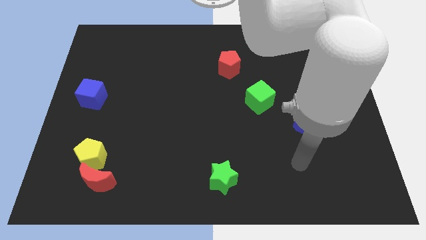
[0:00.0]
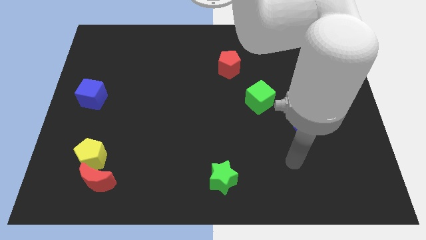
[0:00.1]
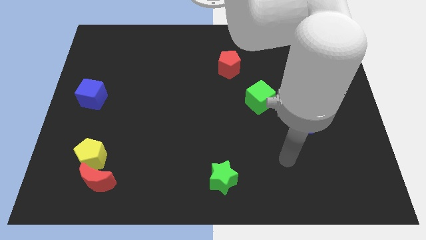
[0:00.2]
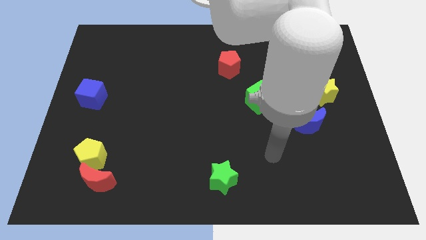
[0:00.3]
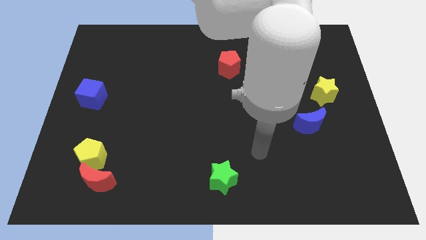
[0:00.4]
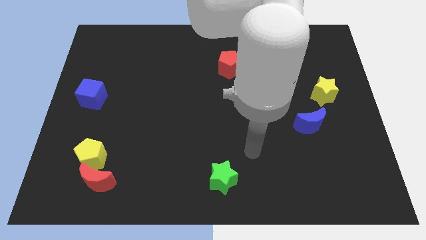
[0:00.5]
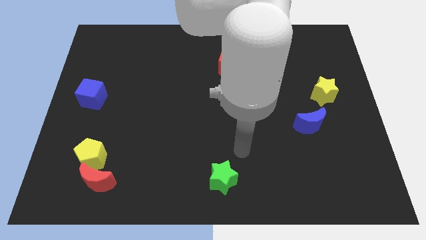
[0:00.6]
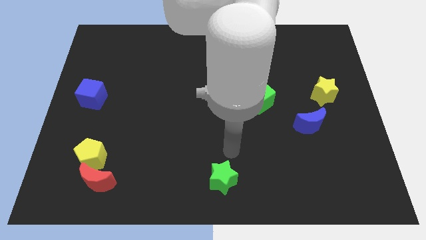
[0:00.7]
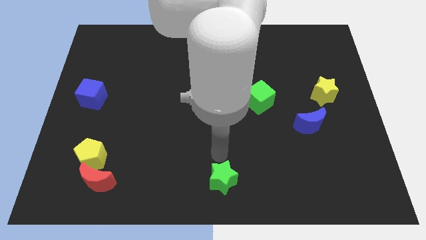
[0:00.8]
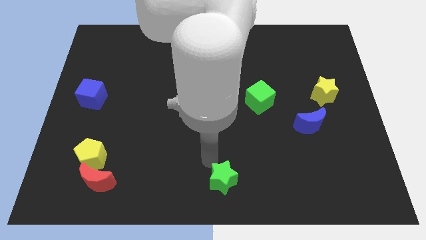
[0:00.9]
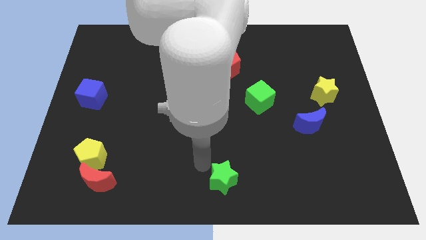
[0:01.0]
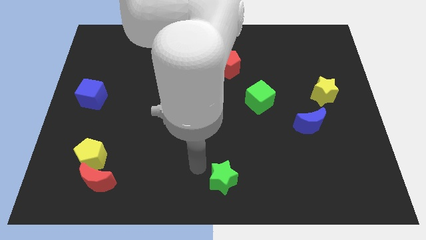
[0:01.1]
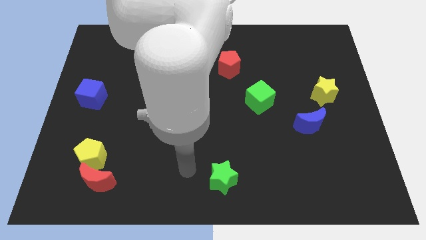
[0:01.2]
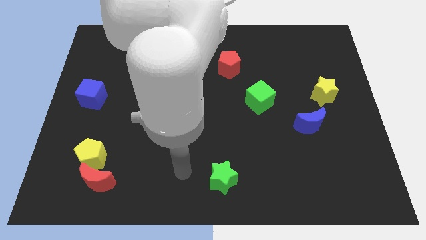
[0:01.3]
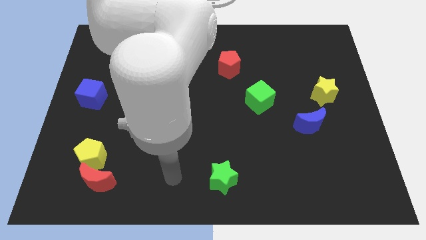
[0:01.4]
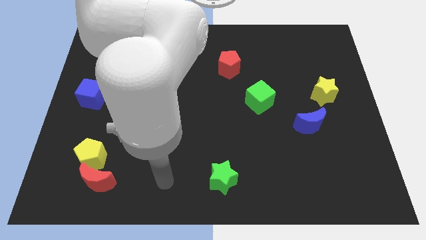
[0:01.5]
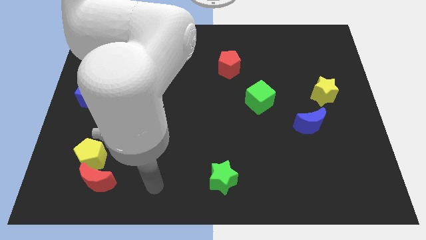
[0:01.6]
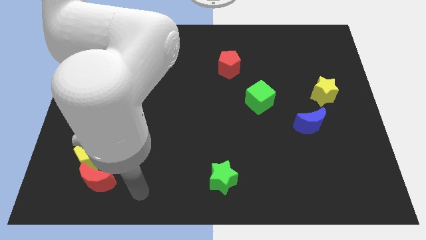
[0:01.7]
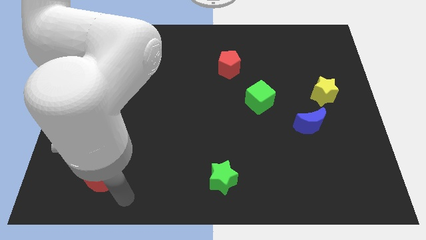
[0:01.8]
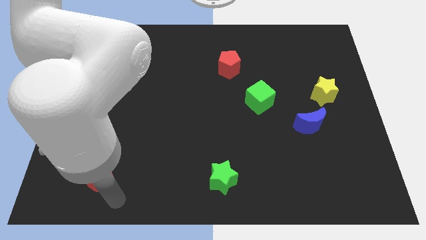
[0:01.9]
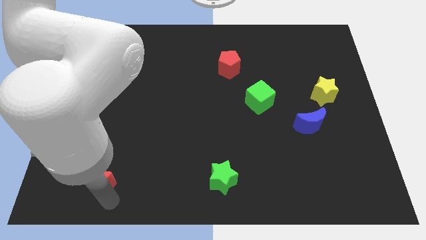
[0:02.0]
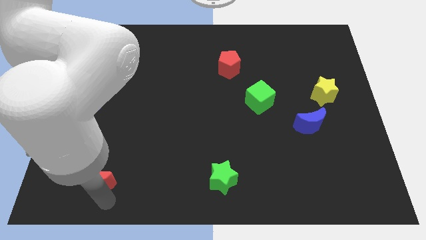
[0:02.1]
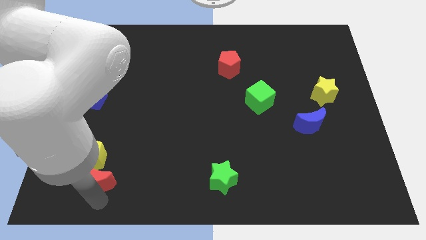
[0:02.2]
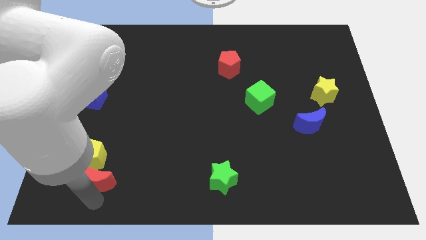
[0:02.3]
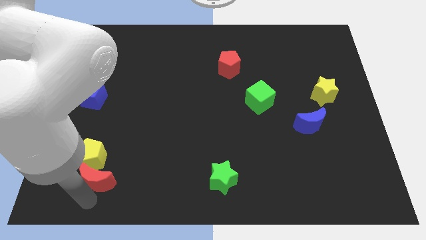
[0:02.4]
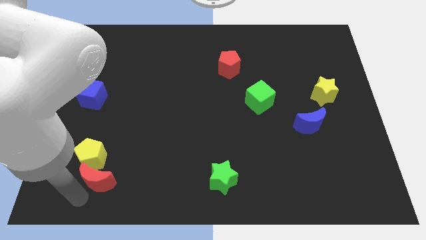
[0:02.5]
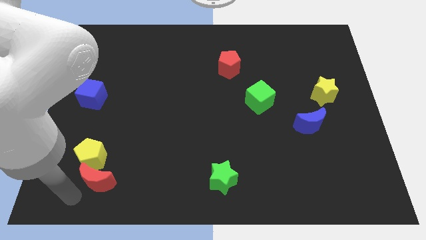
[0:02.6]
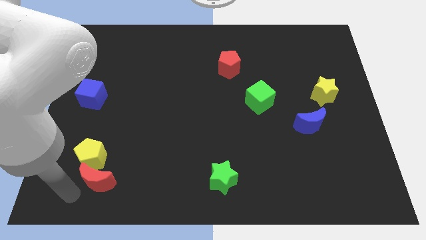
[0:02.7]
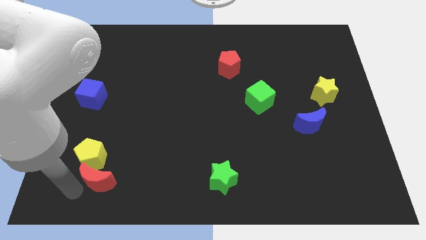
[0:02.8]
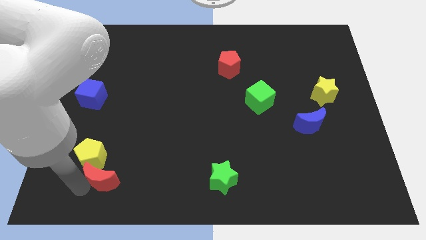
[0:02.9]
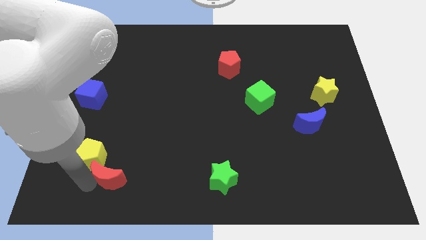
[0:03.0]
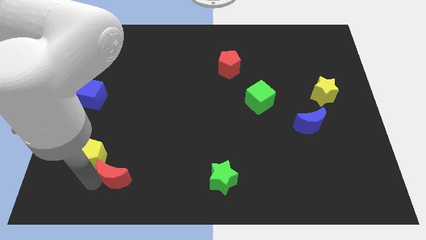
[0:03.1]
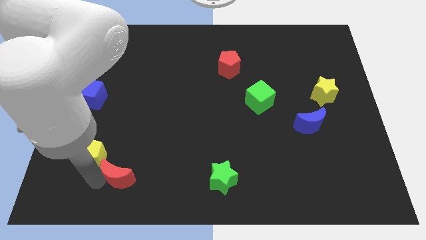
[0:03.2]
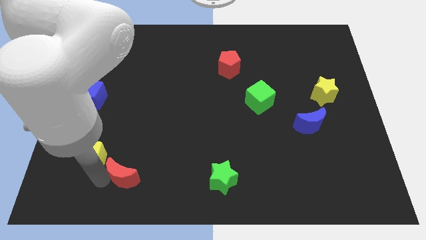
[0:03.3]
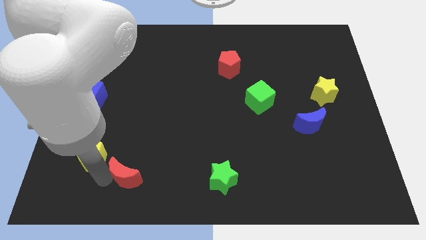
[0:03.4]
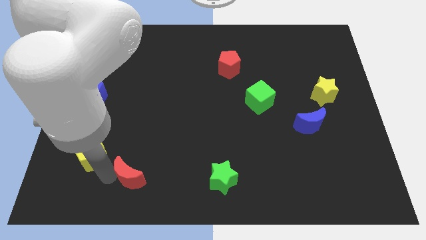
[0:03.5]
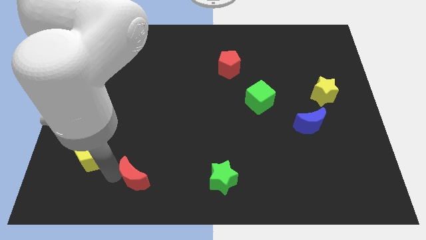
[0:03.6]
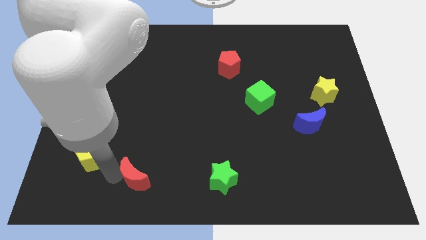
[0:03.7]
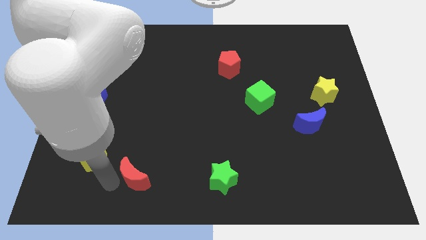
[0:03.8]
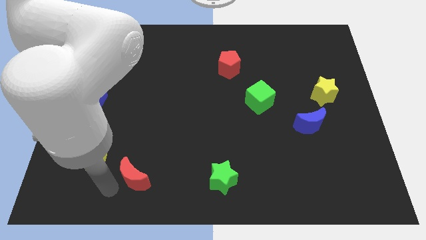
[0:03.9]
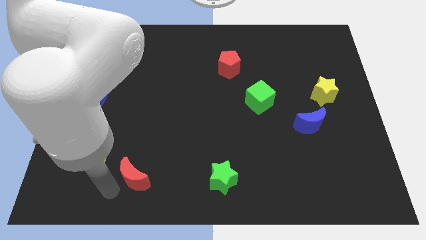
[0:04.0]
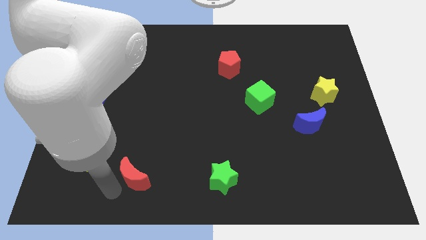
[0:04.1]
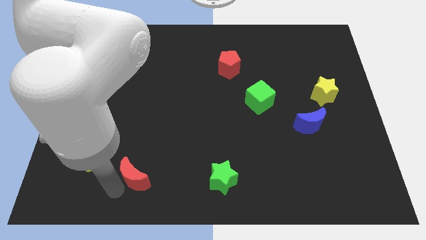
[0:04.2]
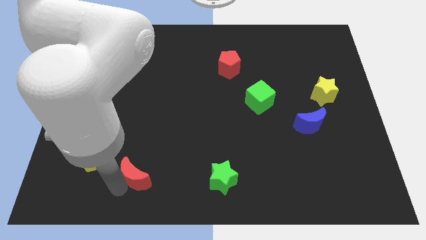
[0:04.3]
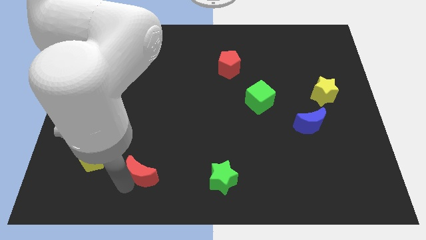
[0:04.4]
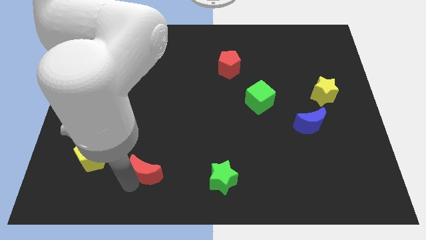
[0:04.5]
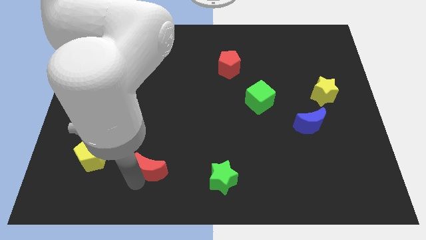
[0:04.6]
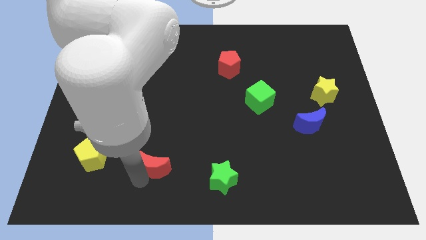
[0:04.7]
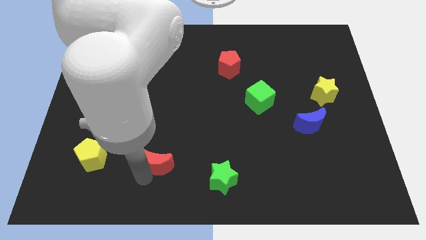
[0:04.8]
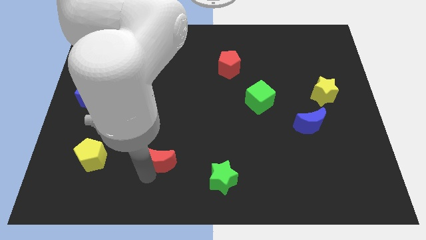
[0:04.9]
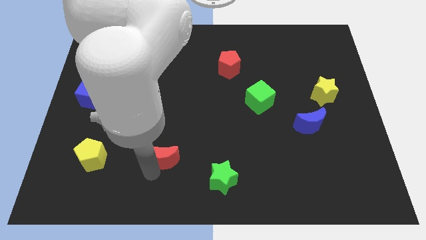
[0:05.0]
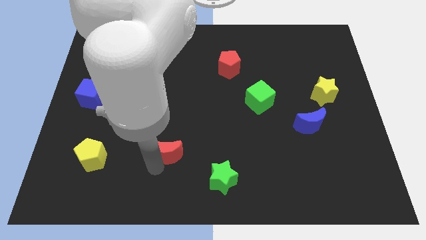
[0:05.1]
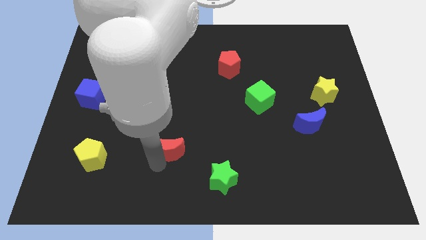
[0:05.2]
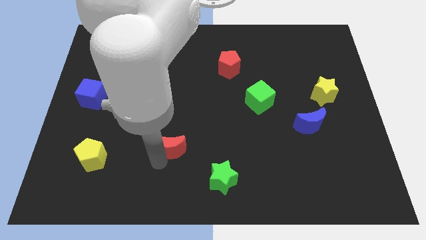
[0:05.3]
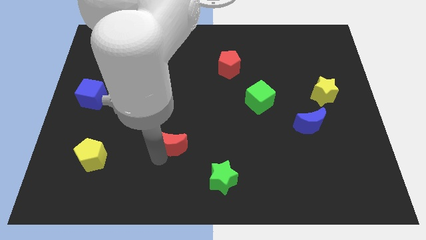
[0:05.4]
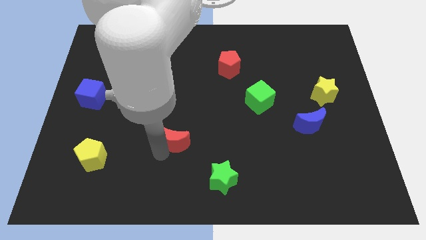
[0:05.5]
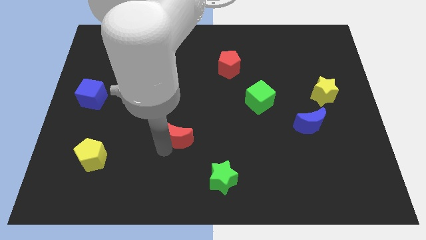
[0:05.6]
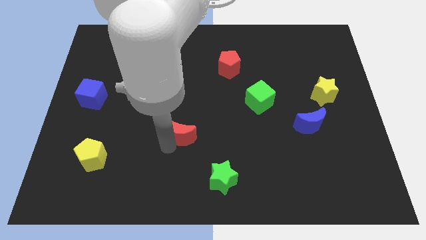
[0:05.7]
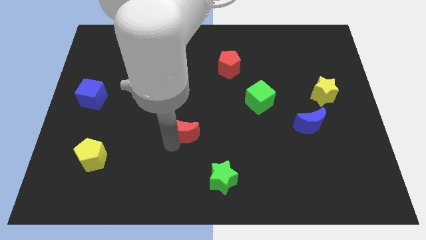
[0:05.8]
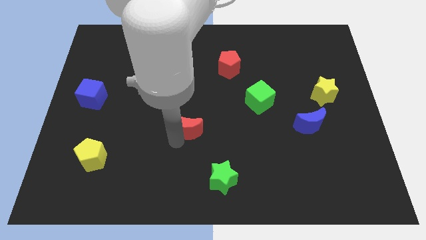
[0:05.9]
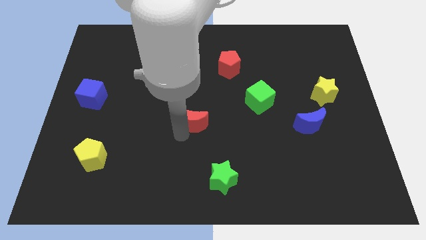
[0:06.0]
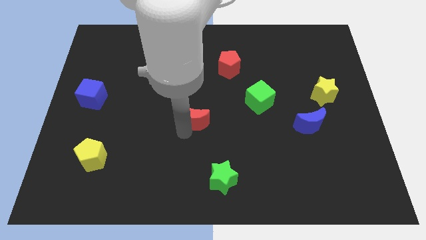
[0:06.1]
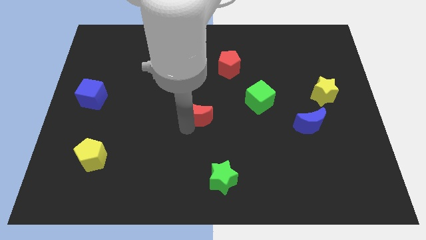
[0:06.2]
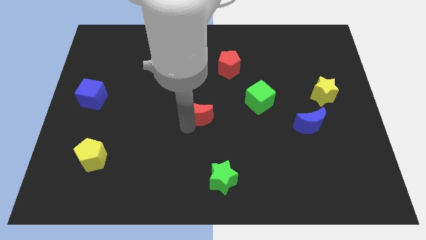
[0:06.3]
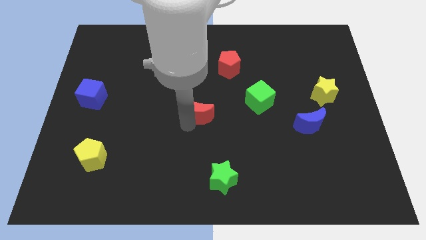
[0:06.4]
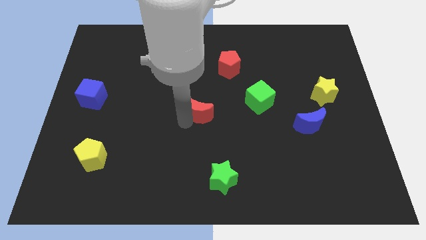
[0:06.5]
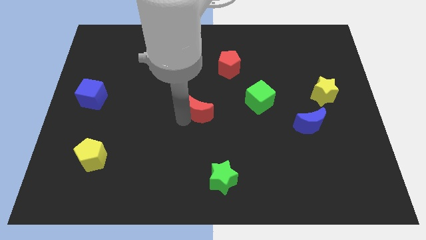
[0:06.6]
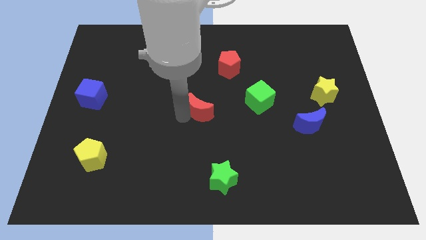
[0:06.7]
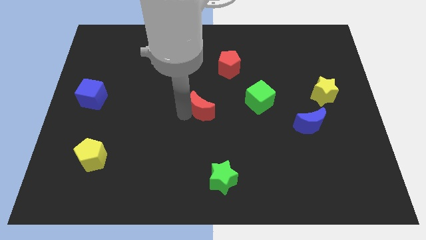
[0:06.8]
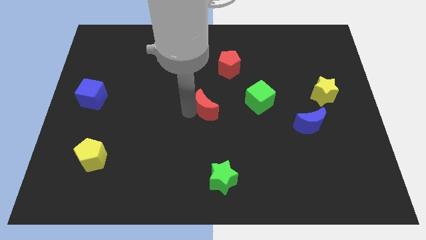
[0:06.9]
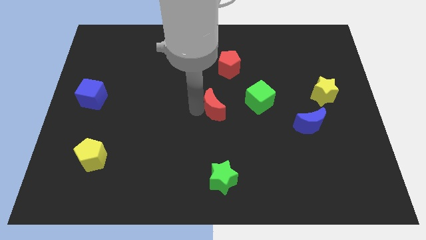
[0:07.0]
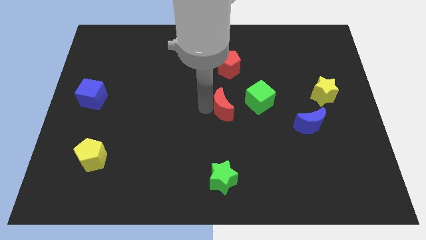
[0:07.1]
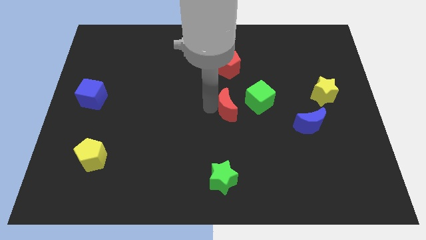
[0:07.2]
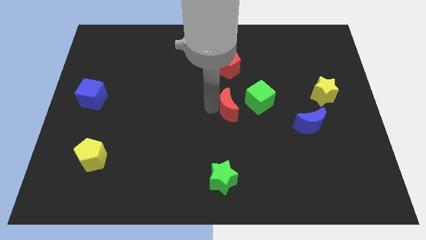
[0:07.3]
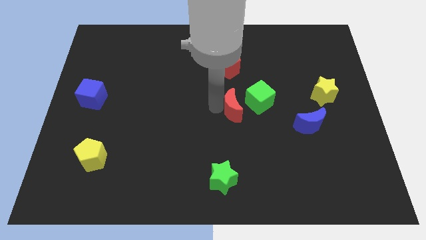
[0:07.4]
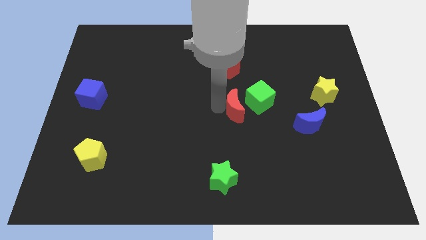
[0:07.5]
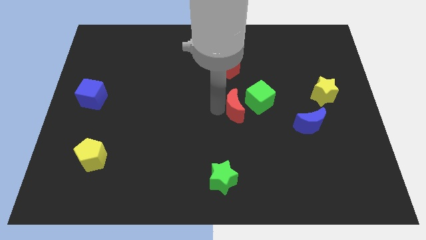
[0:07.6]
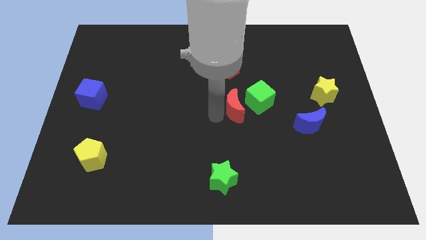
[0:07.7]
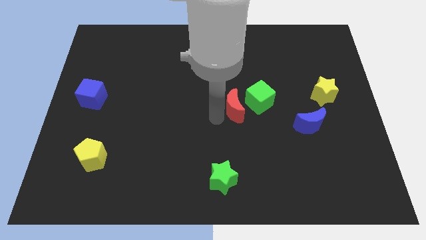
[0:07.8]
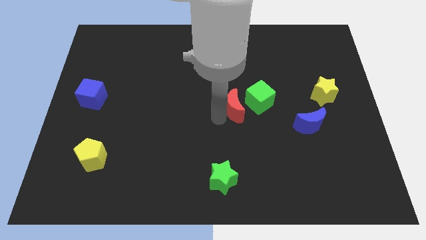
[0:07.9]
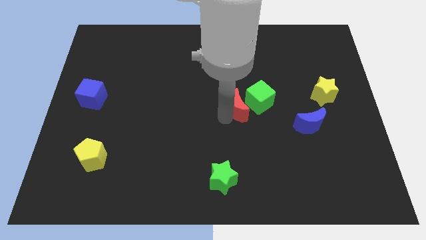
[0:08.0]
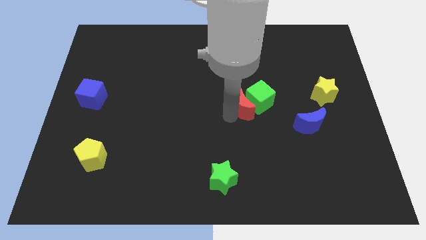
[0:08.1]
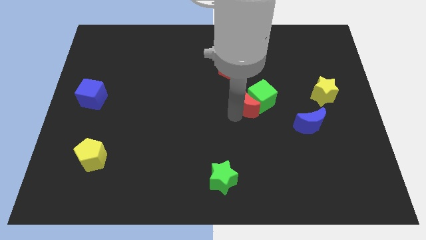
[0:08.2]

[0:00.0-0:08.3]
slide the red moon to the green cube
